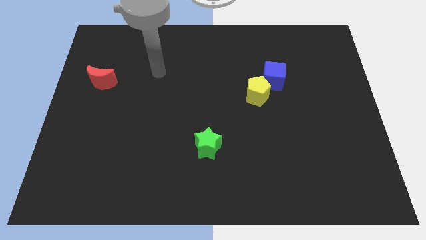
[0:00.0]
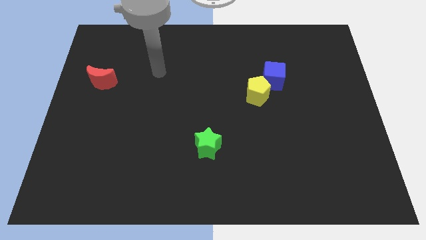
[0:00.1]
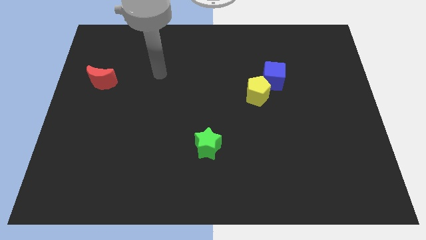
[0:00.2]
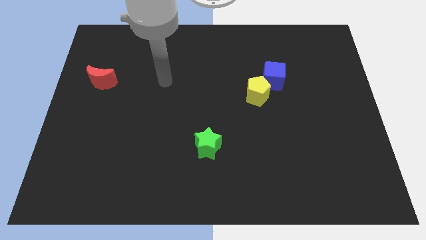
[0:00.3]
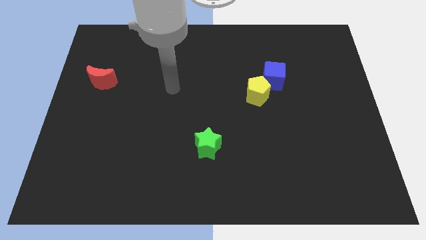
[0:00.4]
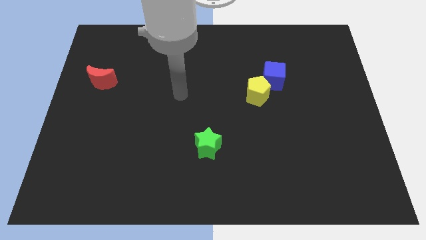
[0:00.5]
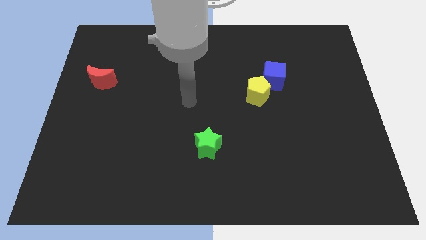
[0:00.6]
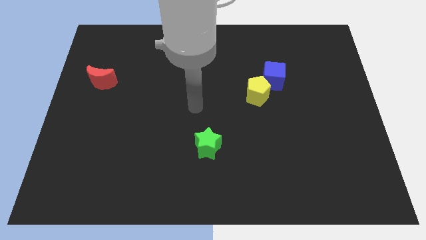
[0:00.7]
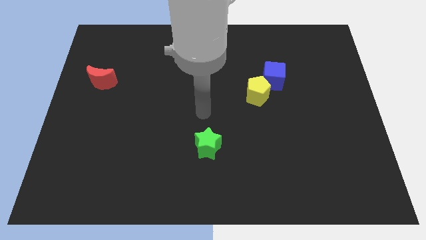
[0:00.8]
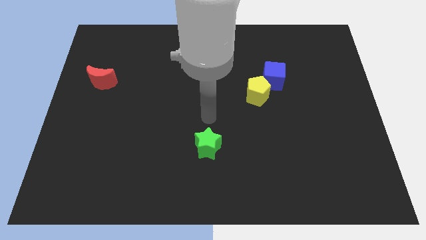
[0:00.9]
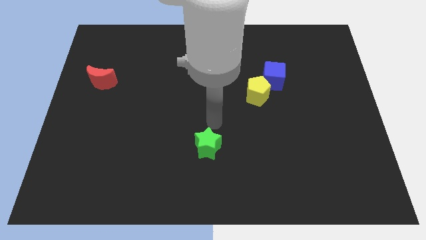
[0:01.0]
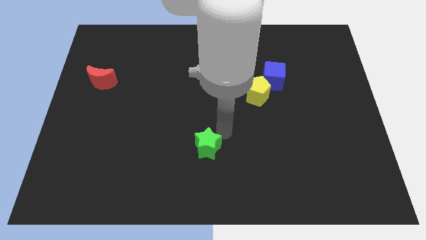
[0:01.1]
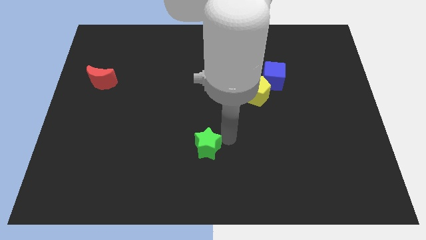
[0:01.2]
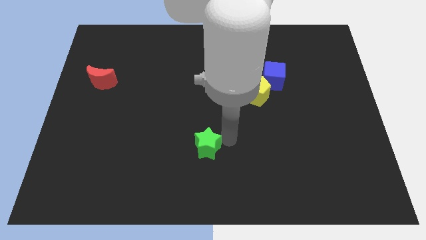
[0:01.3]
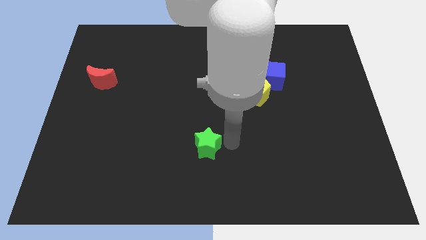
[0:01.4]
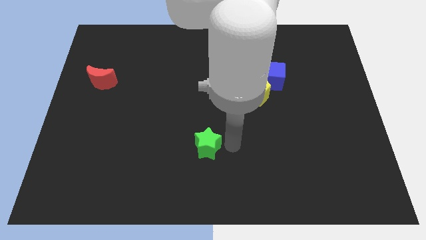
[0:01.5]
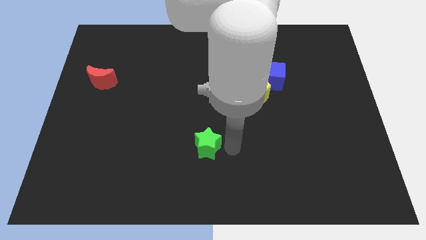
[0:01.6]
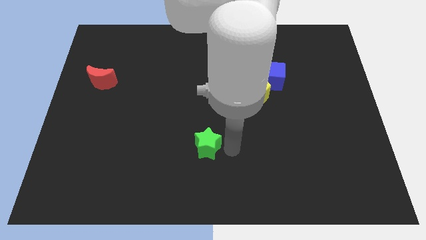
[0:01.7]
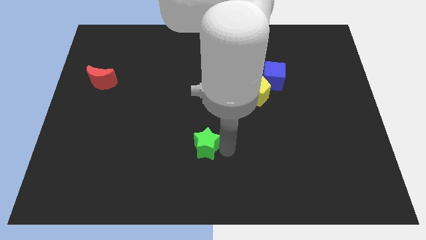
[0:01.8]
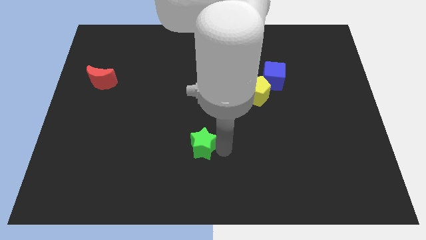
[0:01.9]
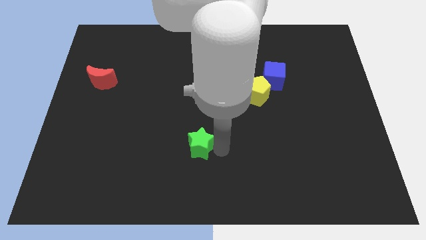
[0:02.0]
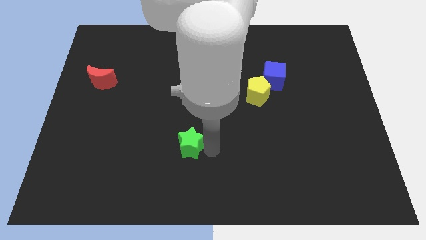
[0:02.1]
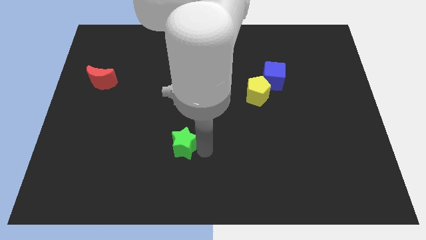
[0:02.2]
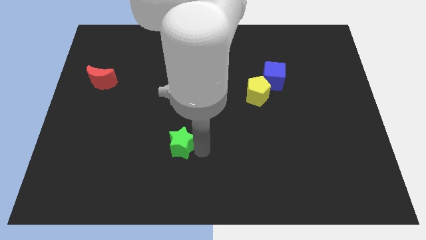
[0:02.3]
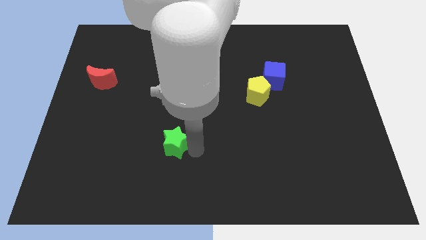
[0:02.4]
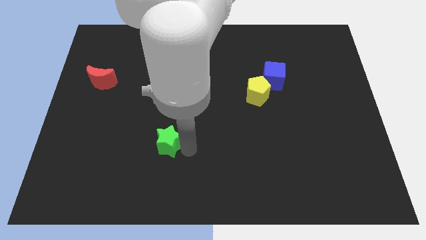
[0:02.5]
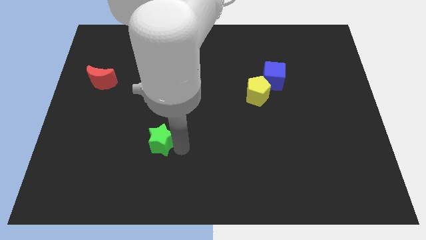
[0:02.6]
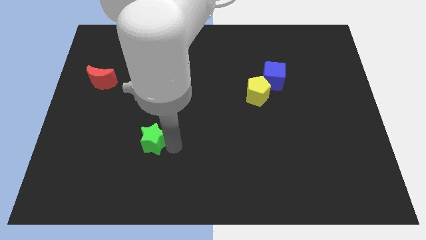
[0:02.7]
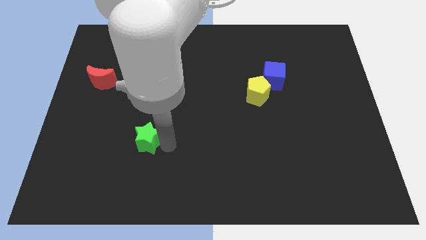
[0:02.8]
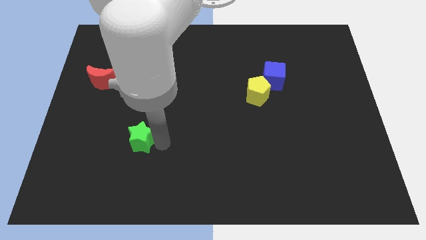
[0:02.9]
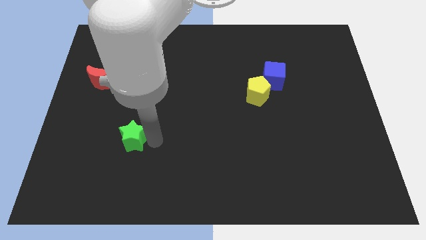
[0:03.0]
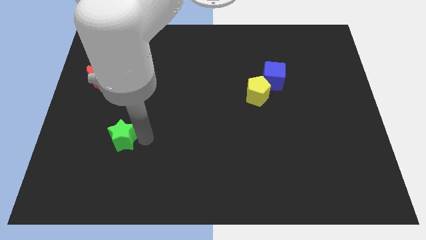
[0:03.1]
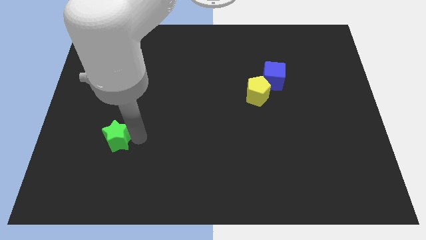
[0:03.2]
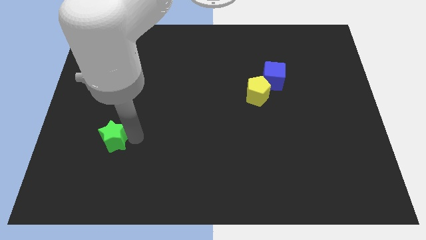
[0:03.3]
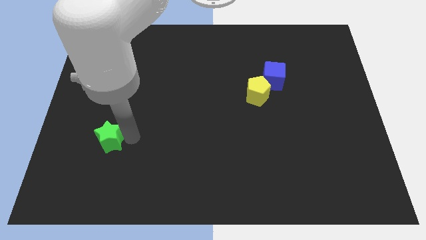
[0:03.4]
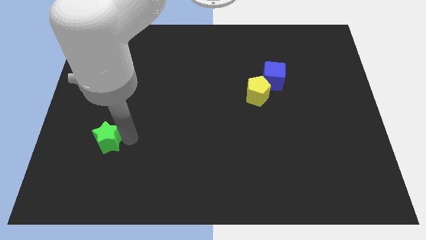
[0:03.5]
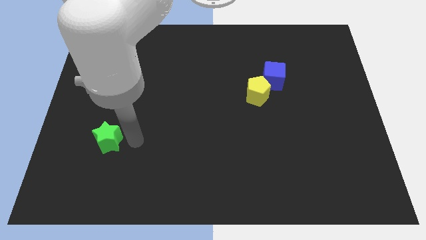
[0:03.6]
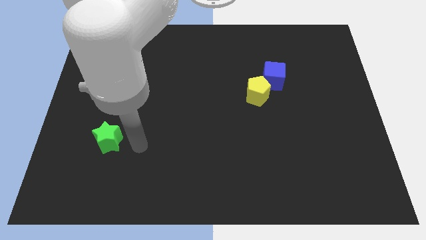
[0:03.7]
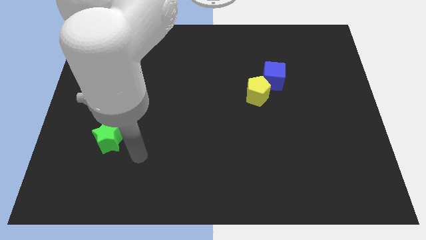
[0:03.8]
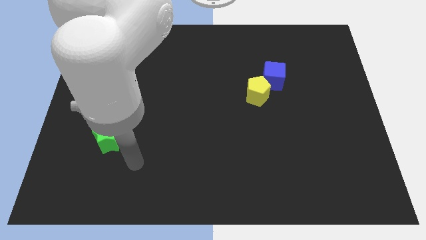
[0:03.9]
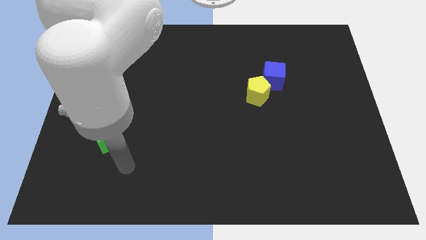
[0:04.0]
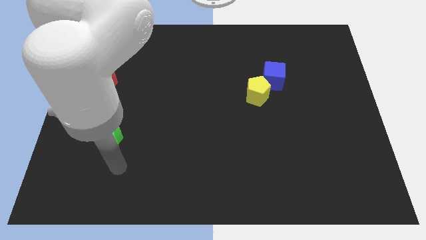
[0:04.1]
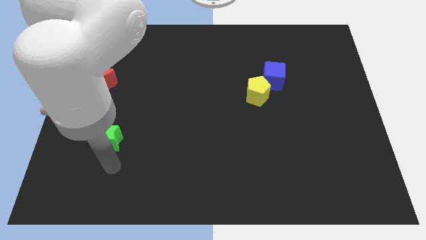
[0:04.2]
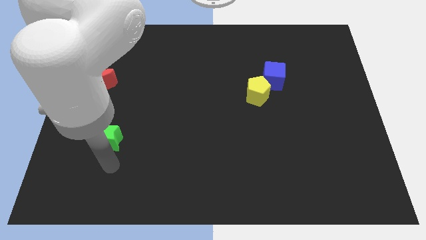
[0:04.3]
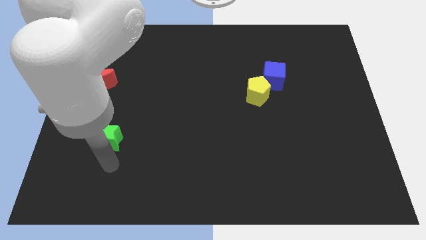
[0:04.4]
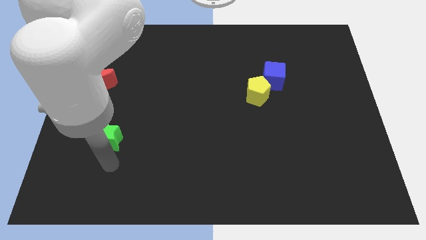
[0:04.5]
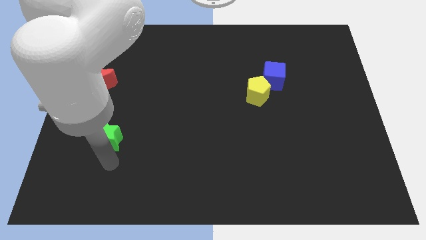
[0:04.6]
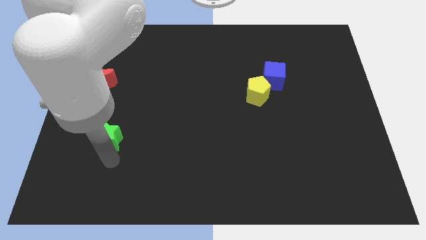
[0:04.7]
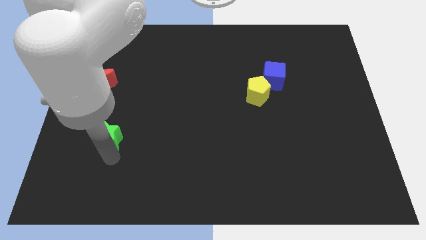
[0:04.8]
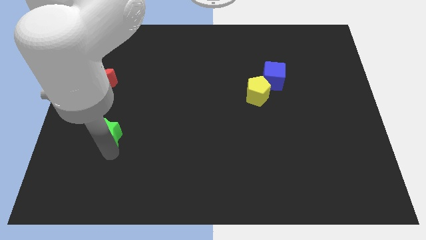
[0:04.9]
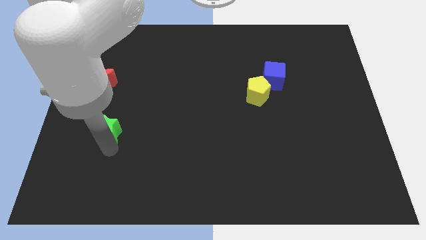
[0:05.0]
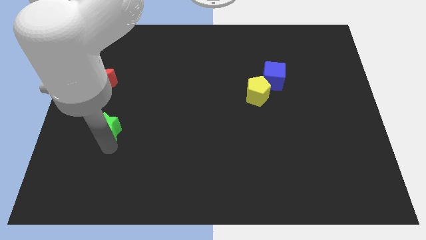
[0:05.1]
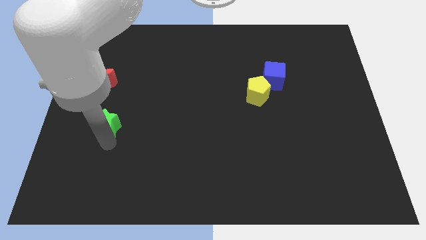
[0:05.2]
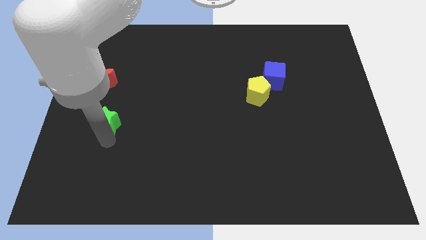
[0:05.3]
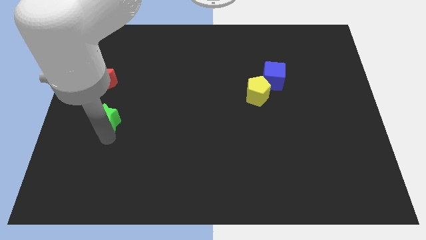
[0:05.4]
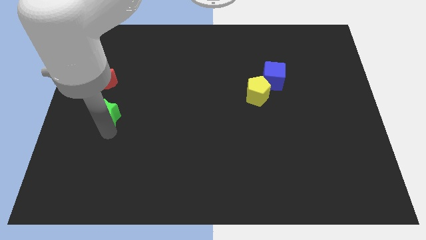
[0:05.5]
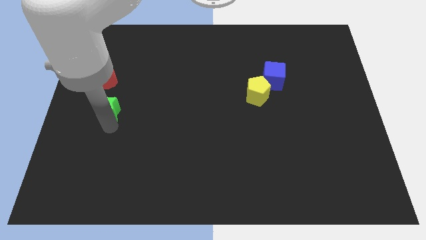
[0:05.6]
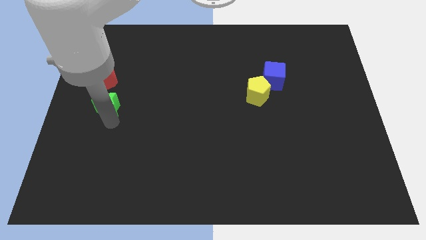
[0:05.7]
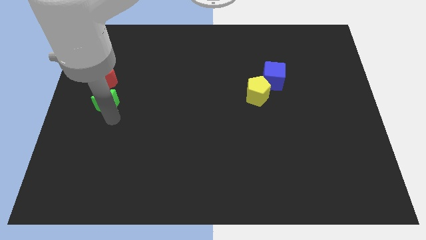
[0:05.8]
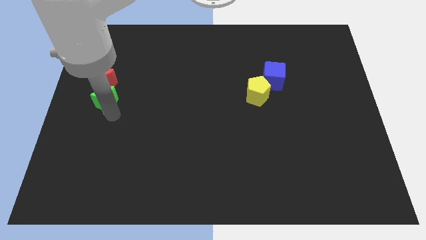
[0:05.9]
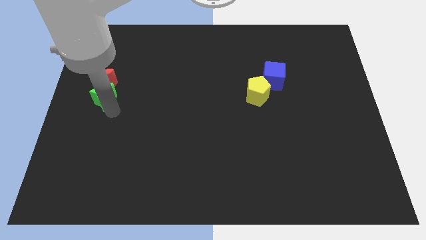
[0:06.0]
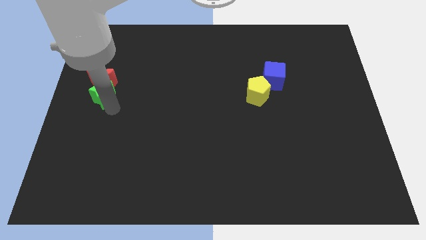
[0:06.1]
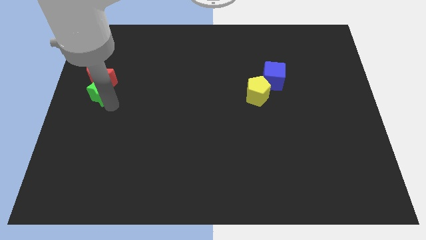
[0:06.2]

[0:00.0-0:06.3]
push the star close to the moon

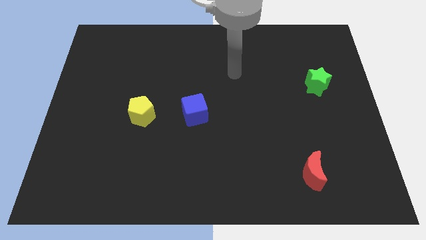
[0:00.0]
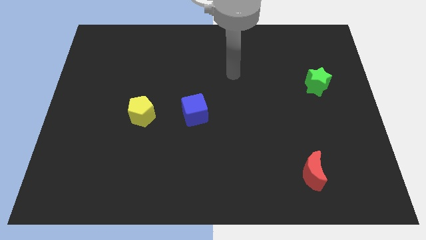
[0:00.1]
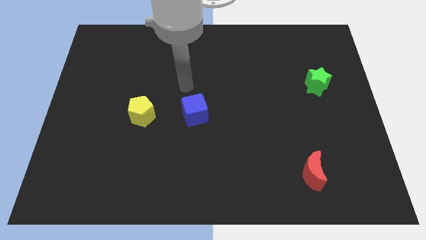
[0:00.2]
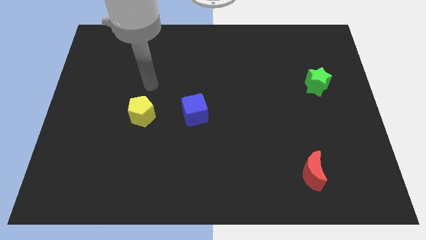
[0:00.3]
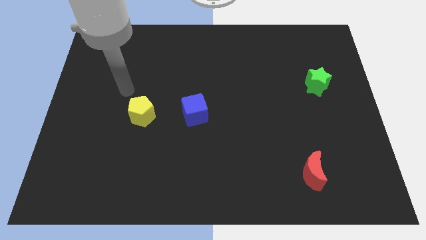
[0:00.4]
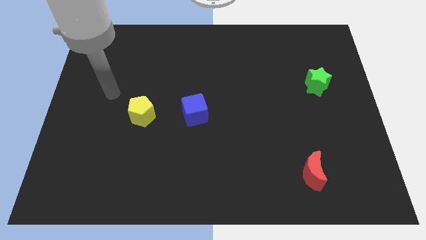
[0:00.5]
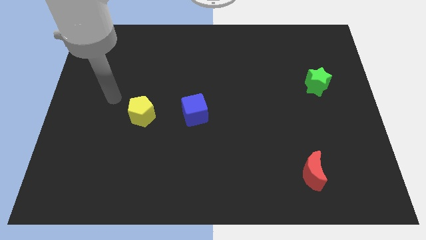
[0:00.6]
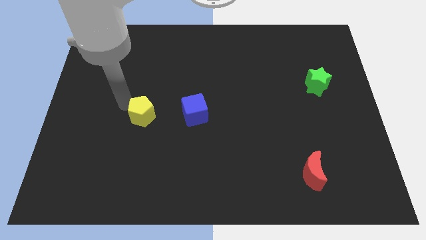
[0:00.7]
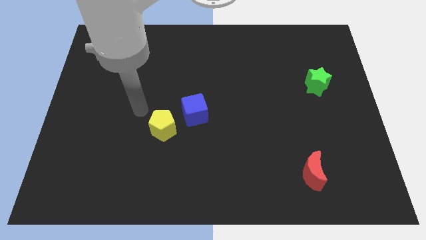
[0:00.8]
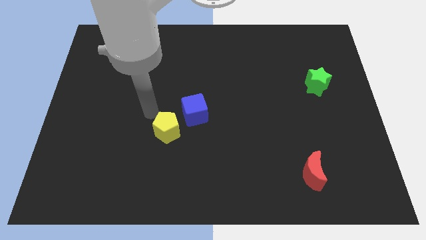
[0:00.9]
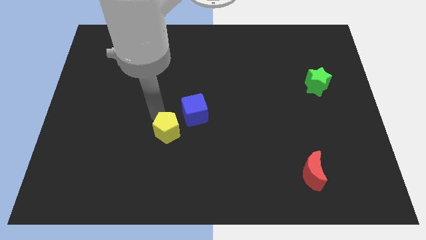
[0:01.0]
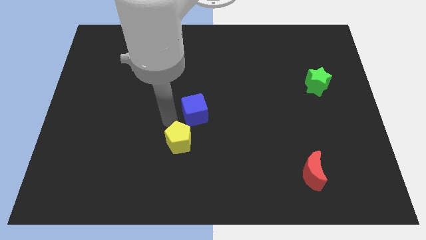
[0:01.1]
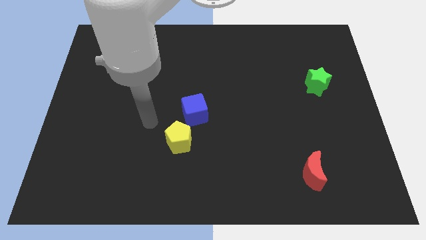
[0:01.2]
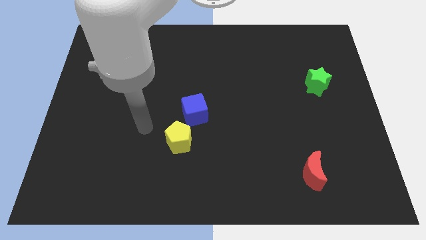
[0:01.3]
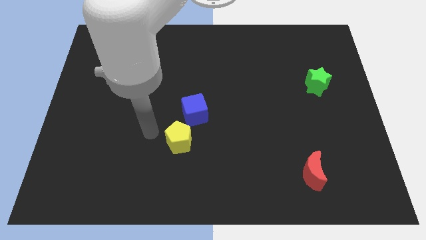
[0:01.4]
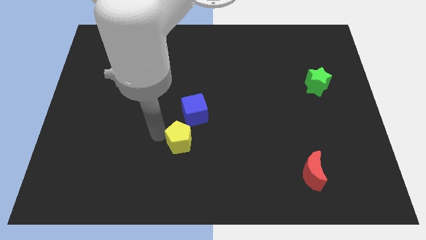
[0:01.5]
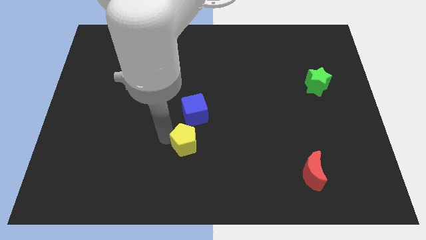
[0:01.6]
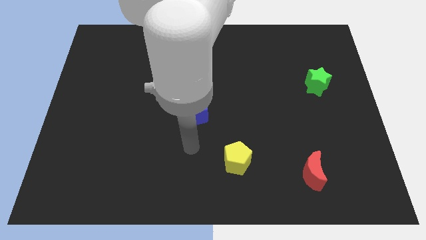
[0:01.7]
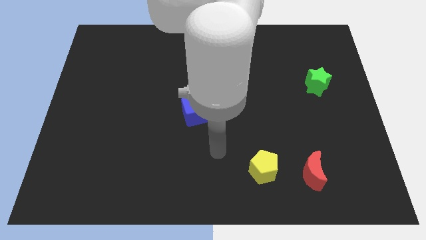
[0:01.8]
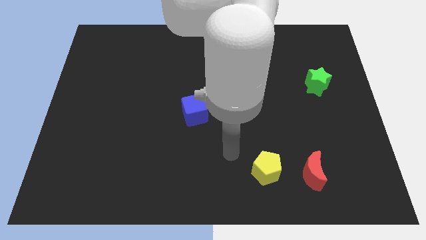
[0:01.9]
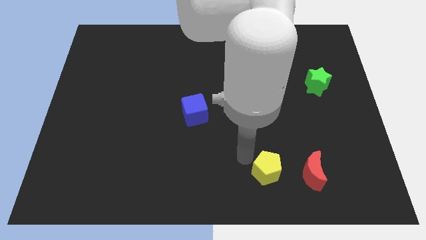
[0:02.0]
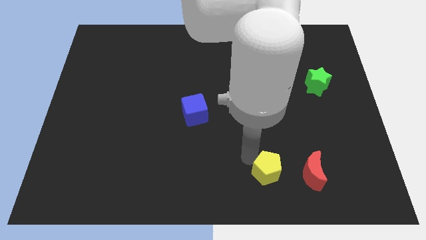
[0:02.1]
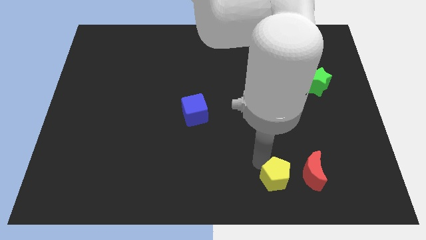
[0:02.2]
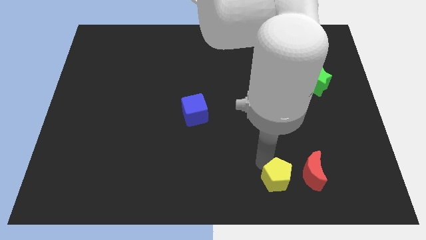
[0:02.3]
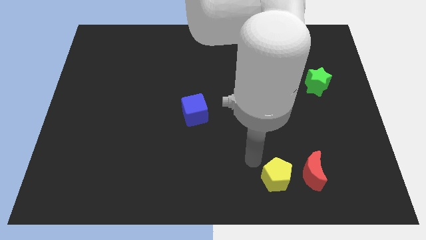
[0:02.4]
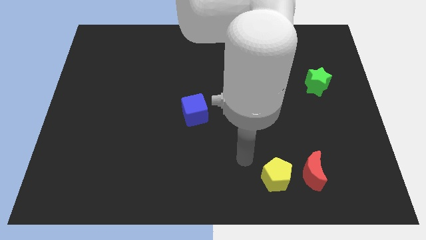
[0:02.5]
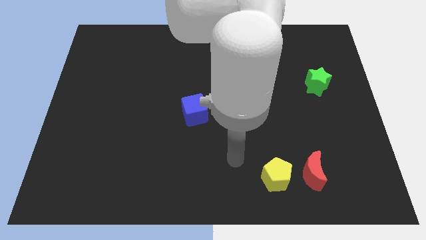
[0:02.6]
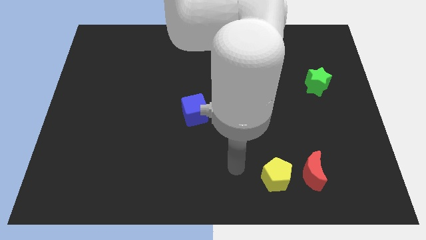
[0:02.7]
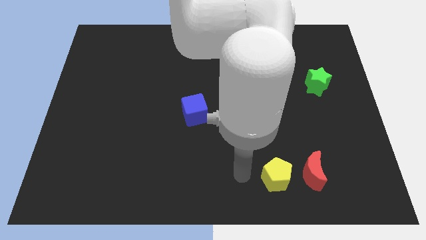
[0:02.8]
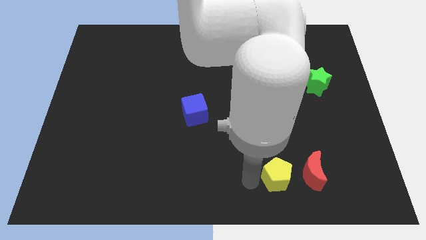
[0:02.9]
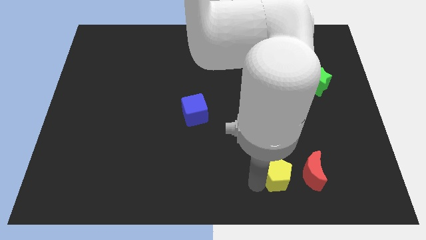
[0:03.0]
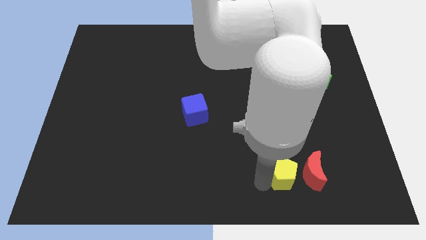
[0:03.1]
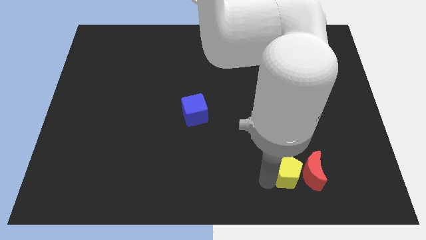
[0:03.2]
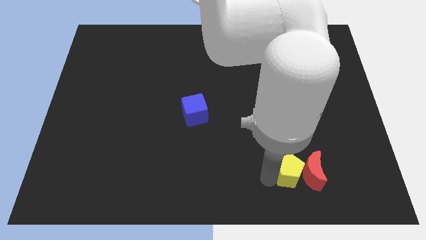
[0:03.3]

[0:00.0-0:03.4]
move the yellow pentagon close to the red block
